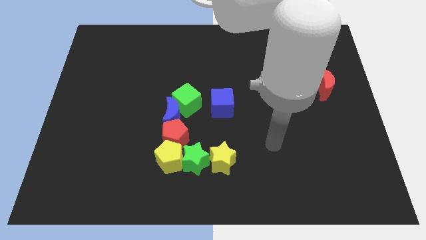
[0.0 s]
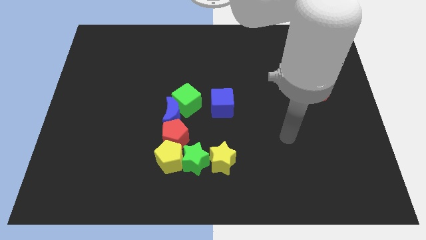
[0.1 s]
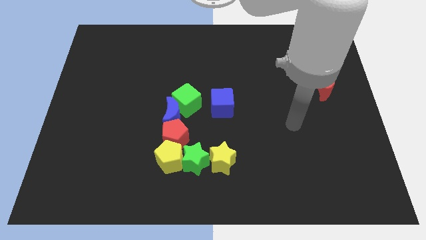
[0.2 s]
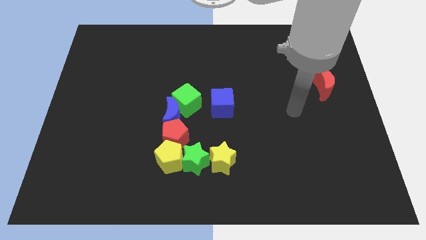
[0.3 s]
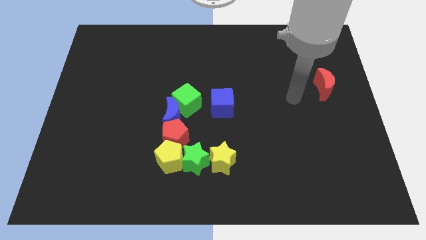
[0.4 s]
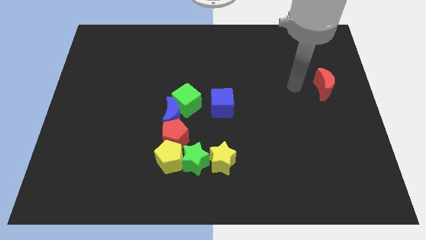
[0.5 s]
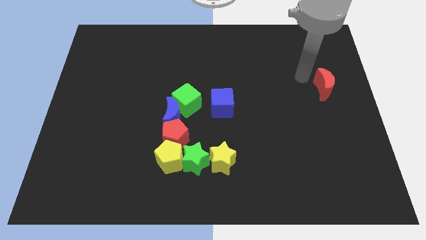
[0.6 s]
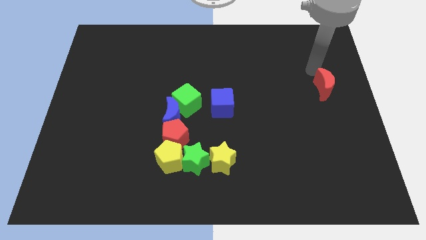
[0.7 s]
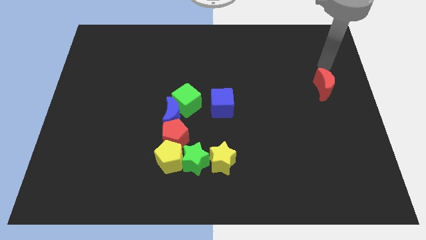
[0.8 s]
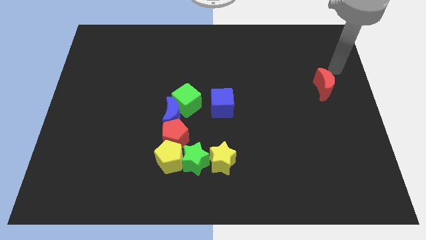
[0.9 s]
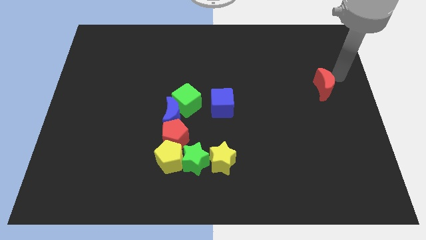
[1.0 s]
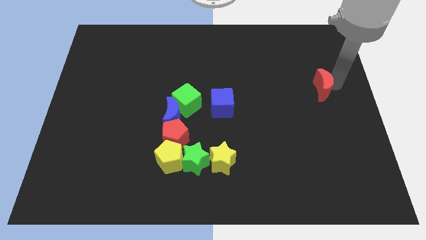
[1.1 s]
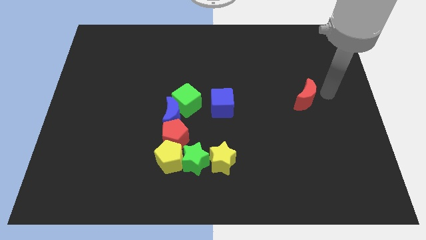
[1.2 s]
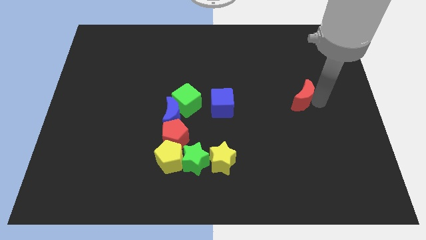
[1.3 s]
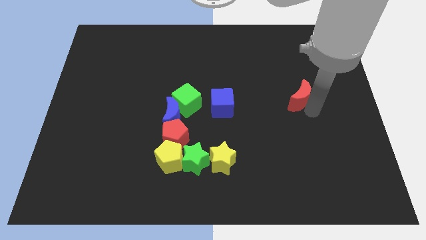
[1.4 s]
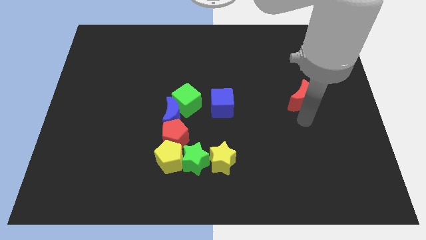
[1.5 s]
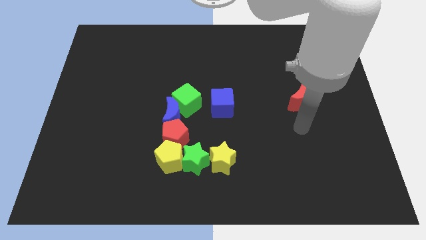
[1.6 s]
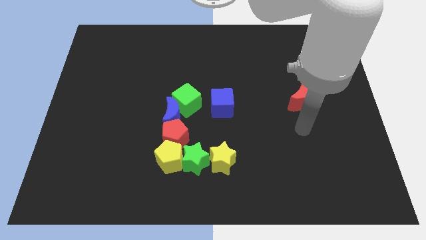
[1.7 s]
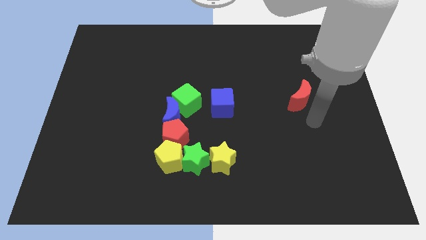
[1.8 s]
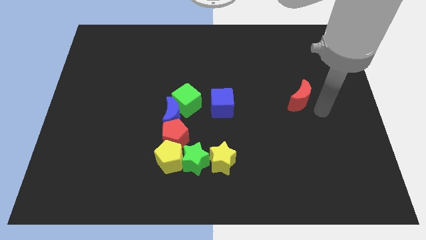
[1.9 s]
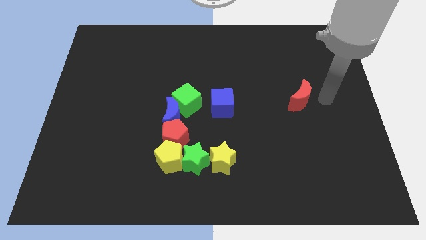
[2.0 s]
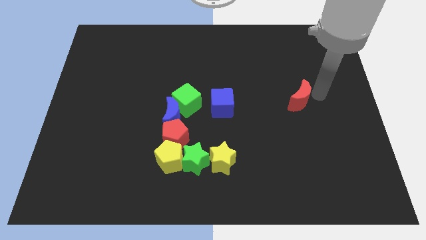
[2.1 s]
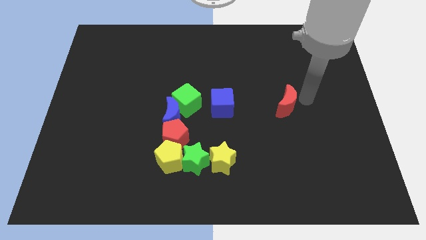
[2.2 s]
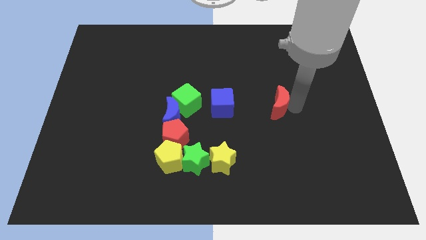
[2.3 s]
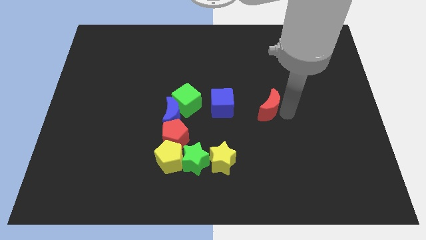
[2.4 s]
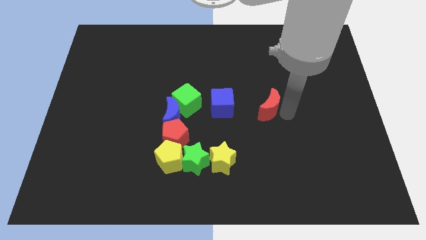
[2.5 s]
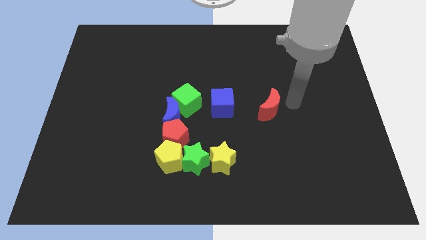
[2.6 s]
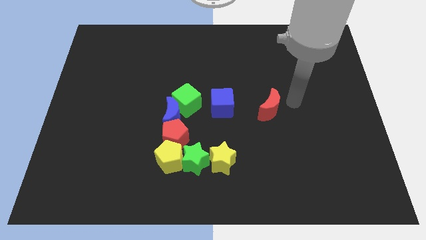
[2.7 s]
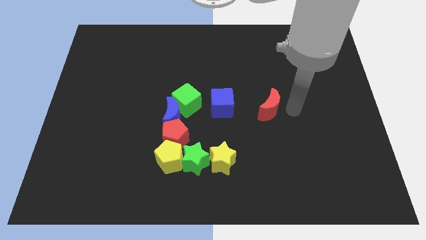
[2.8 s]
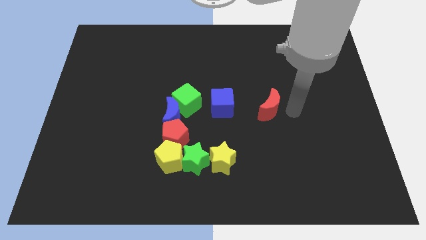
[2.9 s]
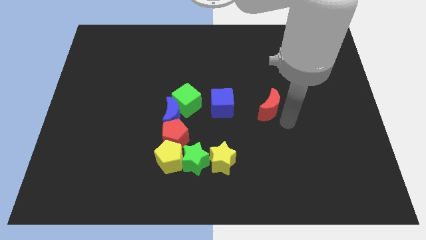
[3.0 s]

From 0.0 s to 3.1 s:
slide red moon to the right of blue cube

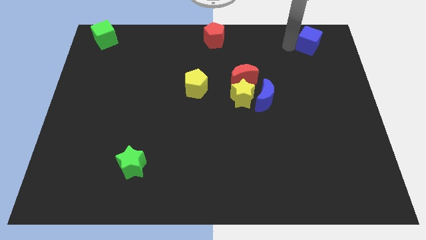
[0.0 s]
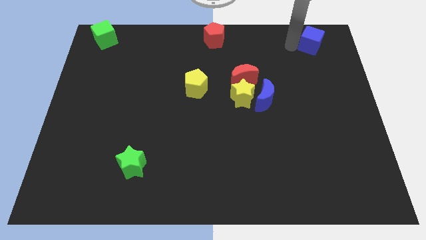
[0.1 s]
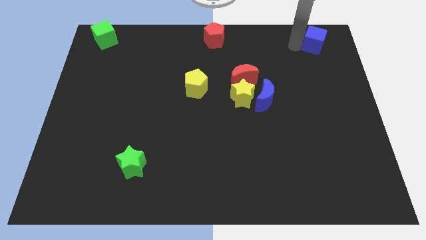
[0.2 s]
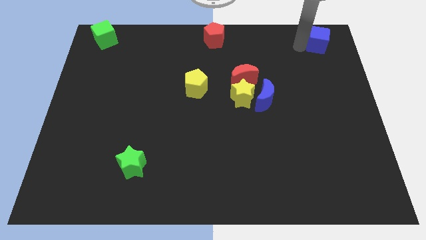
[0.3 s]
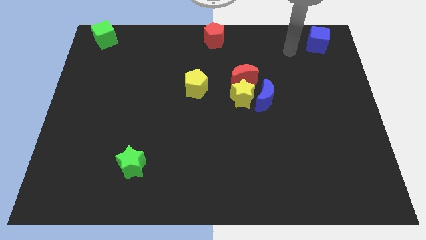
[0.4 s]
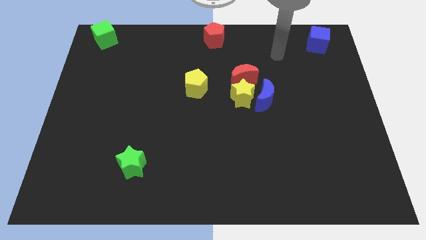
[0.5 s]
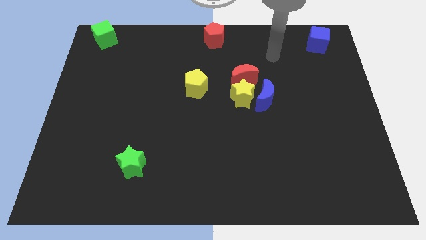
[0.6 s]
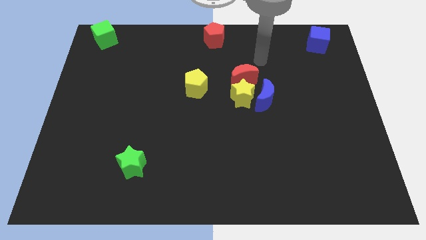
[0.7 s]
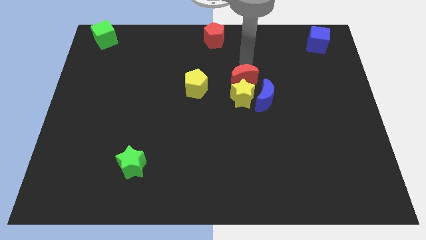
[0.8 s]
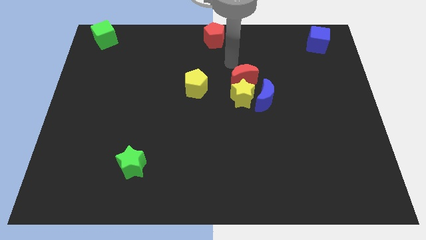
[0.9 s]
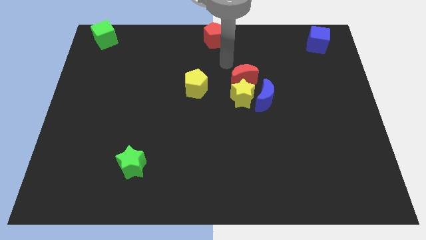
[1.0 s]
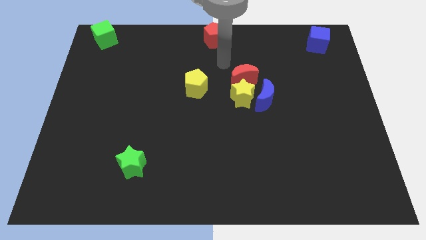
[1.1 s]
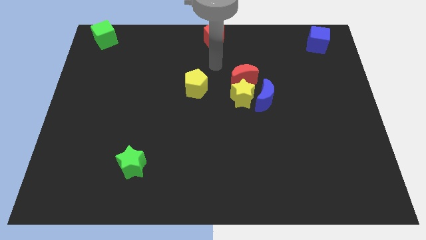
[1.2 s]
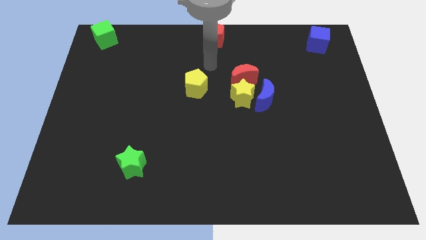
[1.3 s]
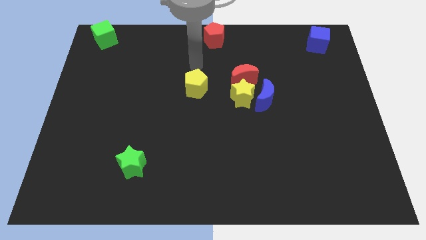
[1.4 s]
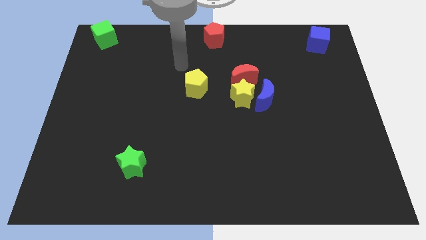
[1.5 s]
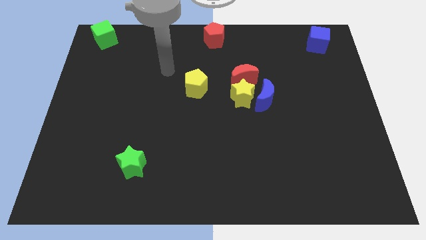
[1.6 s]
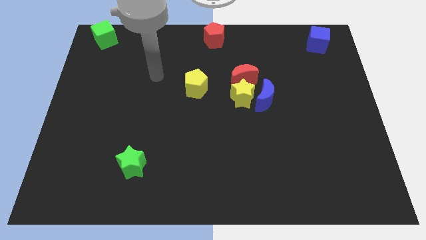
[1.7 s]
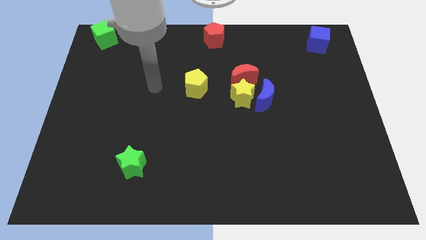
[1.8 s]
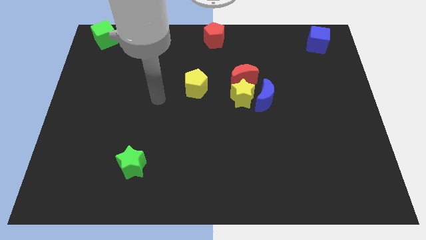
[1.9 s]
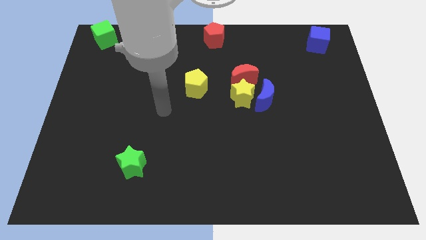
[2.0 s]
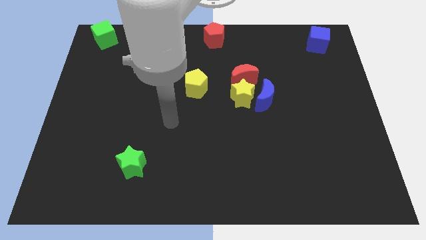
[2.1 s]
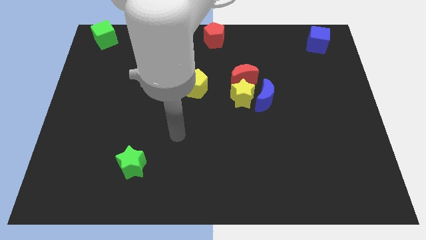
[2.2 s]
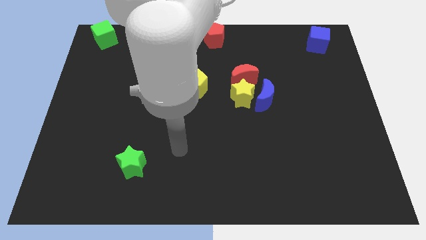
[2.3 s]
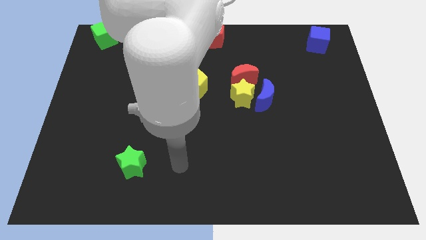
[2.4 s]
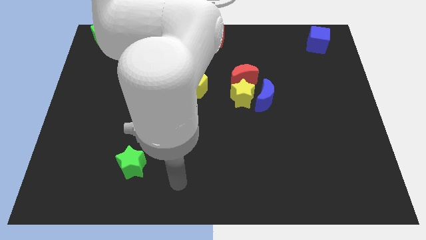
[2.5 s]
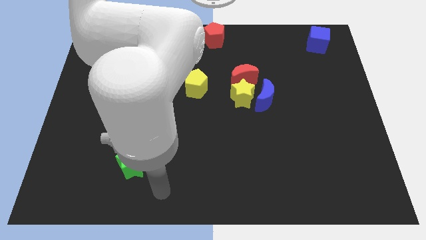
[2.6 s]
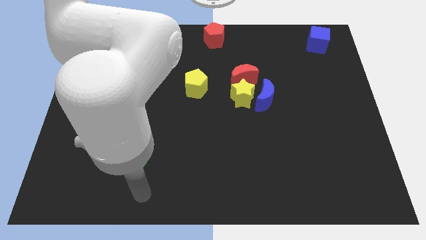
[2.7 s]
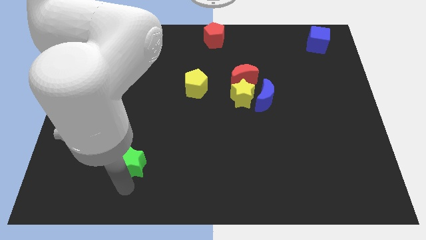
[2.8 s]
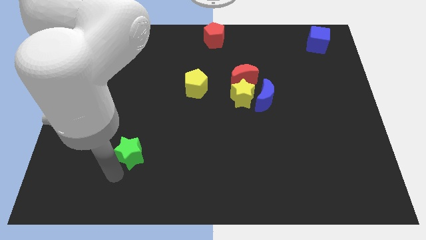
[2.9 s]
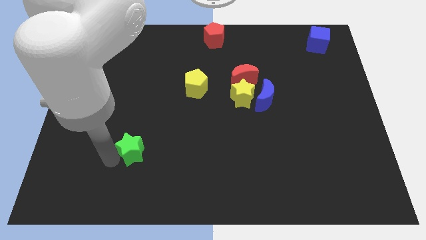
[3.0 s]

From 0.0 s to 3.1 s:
touch the bottom of green star

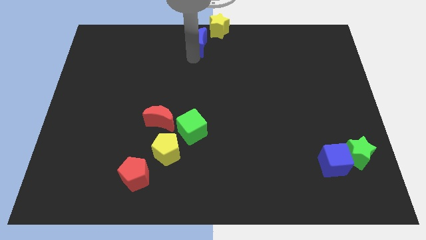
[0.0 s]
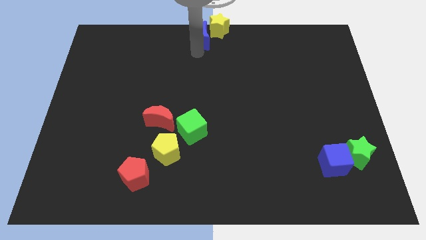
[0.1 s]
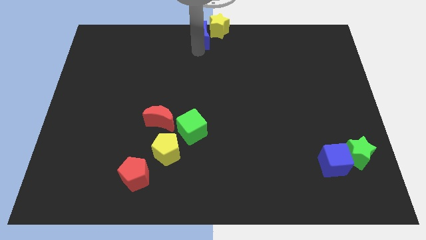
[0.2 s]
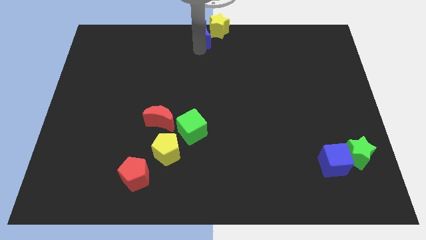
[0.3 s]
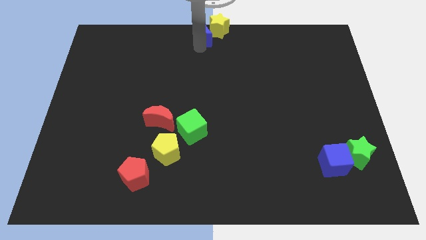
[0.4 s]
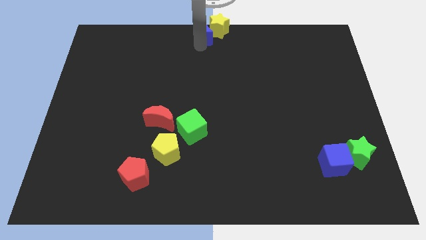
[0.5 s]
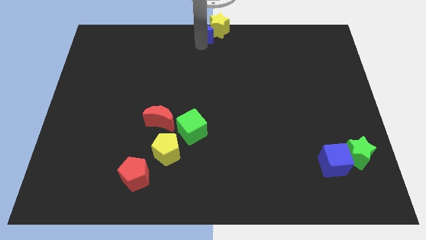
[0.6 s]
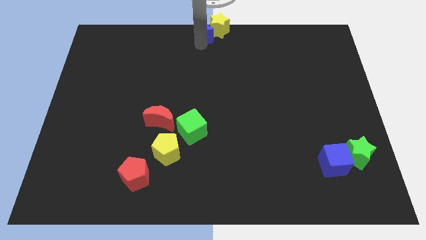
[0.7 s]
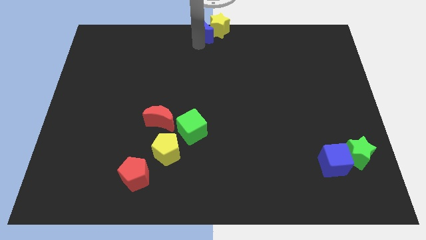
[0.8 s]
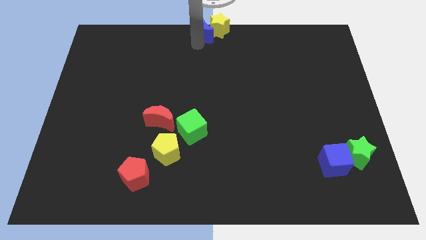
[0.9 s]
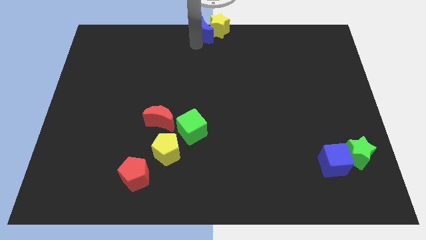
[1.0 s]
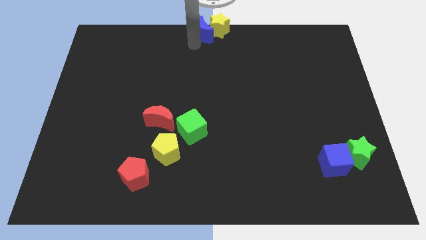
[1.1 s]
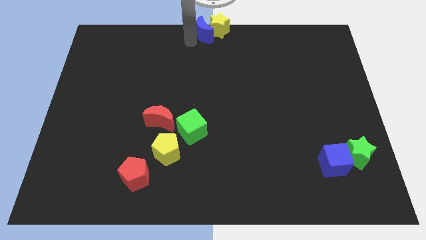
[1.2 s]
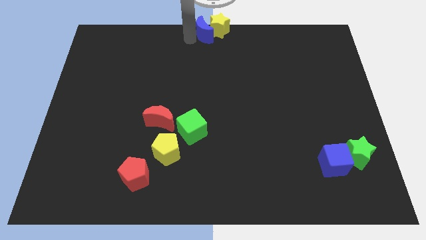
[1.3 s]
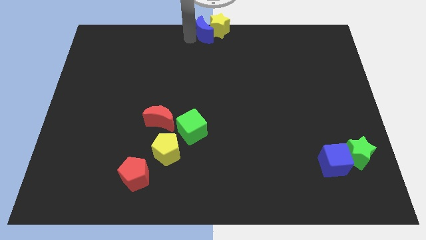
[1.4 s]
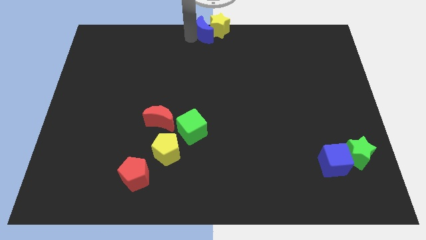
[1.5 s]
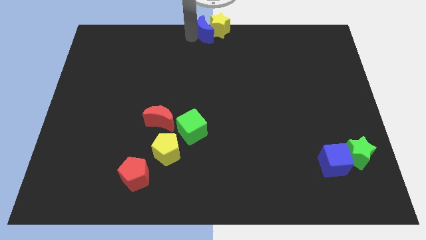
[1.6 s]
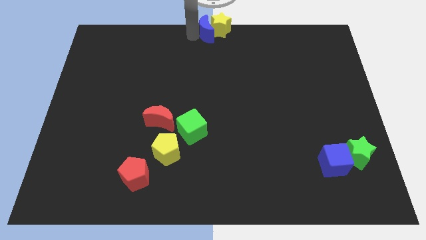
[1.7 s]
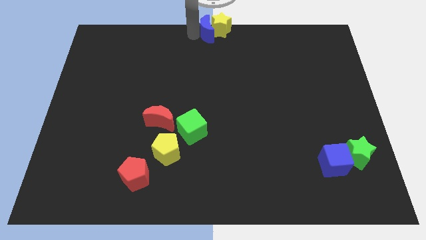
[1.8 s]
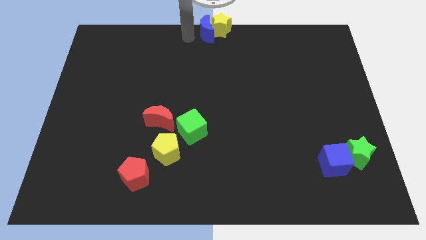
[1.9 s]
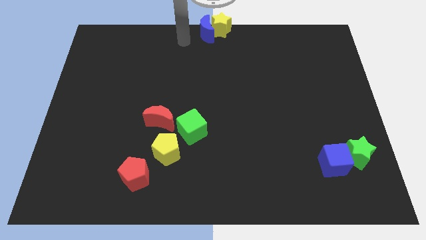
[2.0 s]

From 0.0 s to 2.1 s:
push blue moon into yellow star

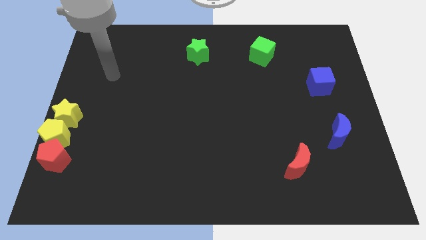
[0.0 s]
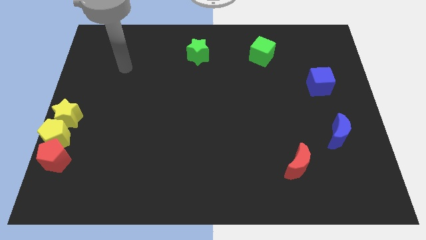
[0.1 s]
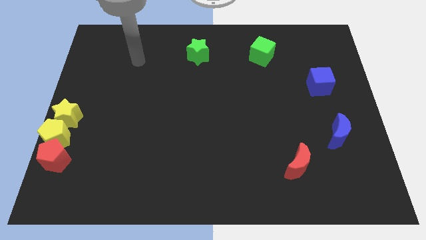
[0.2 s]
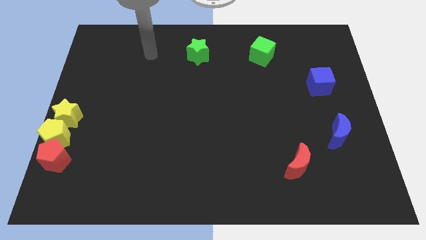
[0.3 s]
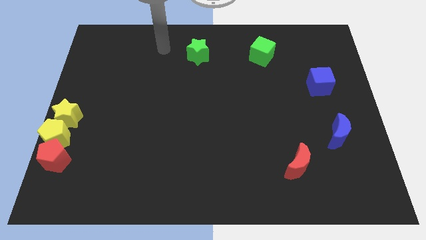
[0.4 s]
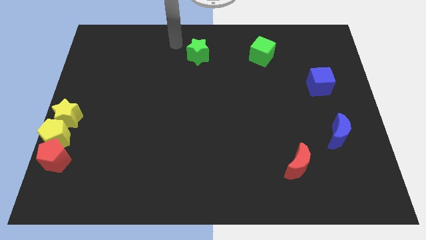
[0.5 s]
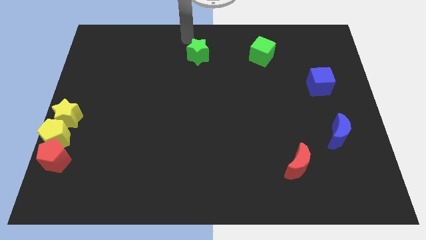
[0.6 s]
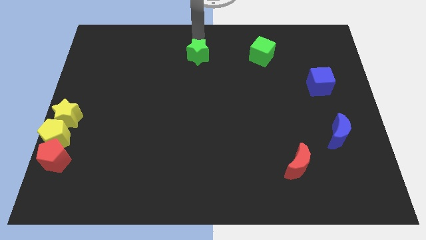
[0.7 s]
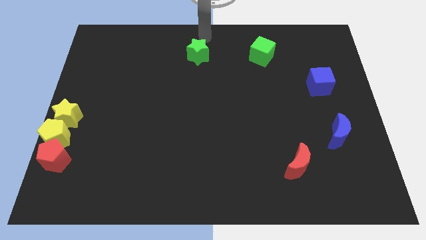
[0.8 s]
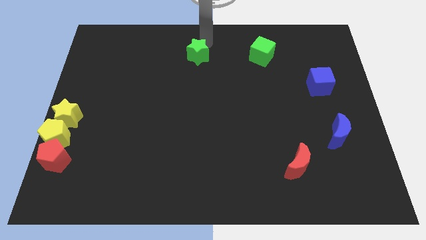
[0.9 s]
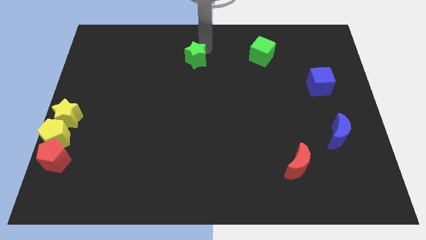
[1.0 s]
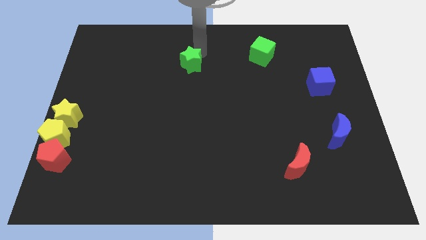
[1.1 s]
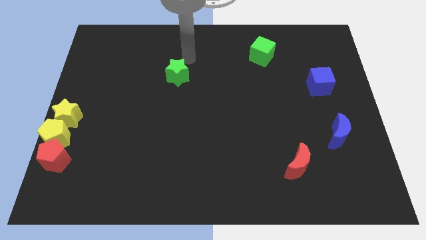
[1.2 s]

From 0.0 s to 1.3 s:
move green star slightly down
